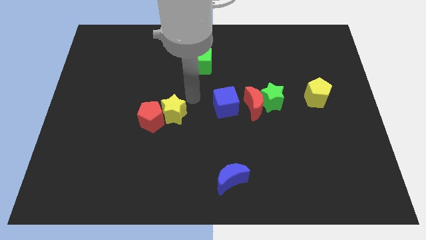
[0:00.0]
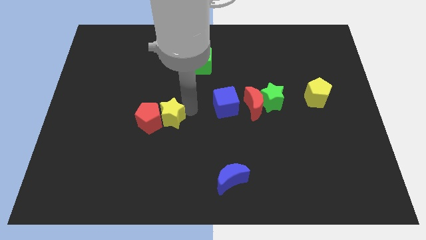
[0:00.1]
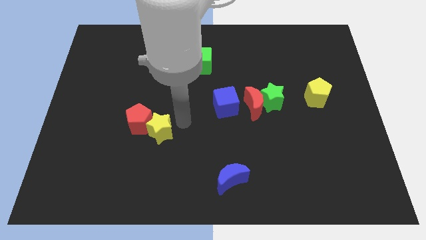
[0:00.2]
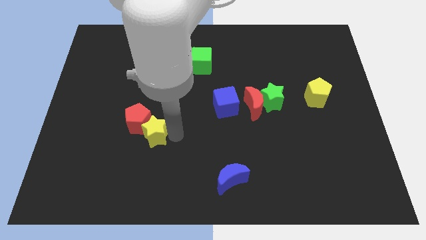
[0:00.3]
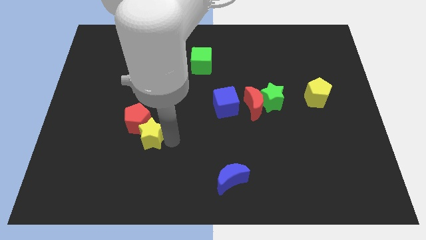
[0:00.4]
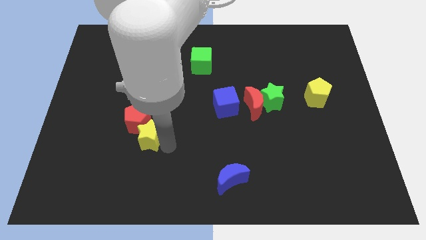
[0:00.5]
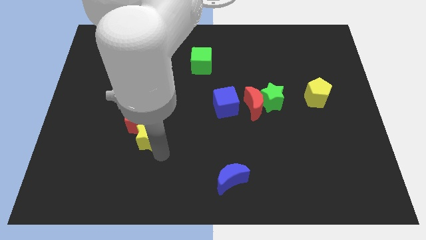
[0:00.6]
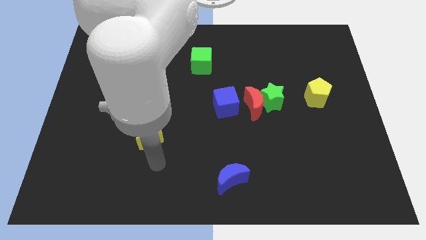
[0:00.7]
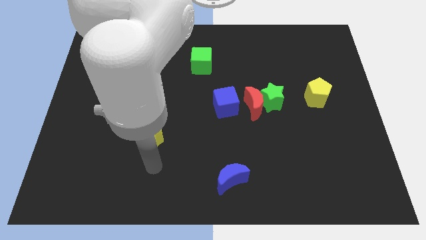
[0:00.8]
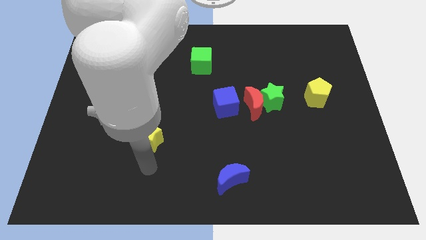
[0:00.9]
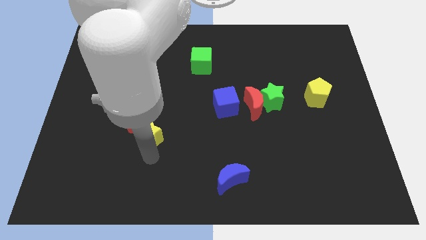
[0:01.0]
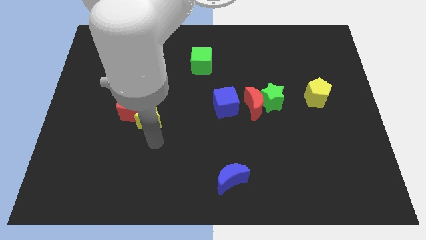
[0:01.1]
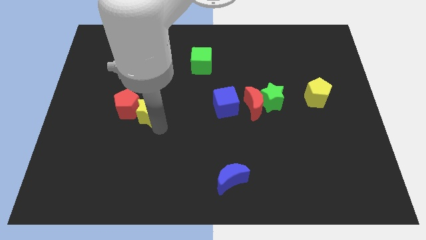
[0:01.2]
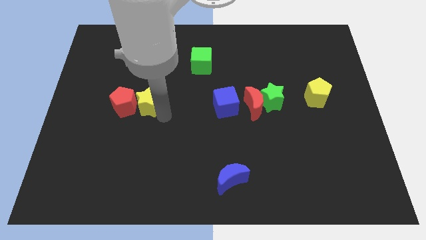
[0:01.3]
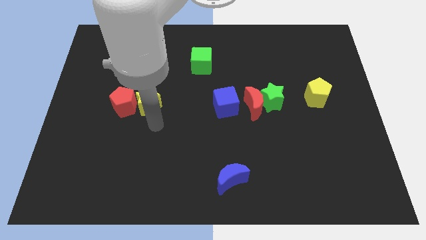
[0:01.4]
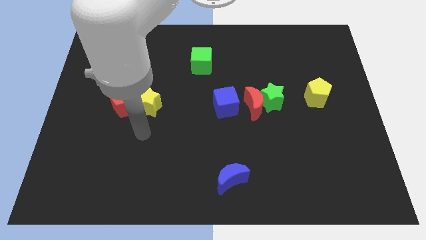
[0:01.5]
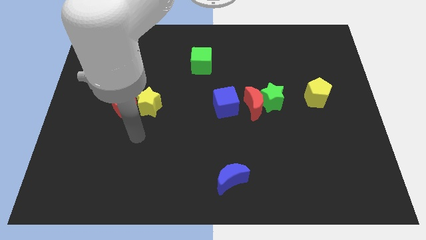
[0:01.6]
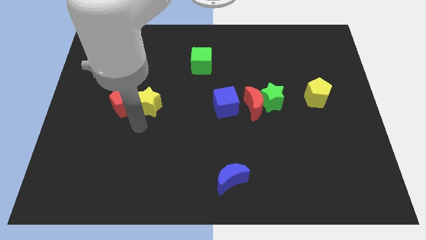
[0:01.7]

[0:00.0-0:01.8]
push the yellow star and red pentagon to the left side

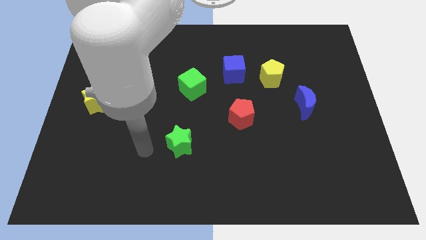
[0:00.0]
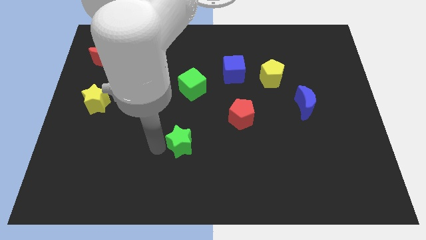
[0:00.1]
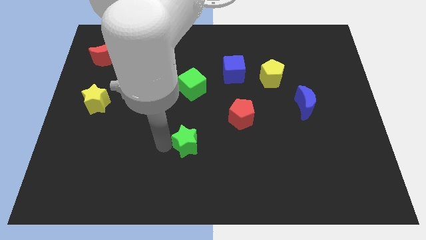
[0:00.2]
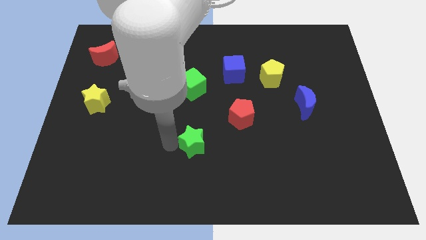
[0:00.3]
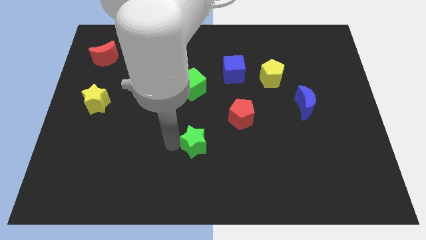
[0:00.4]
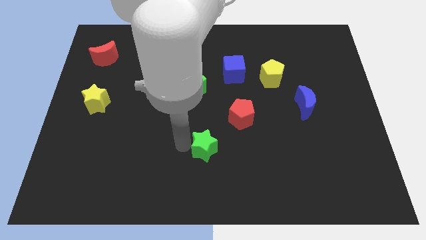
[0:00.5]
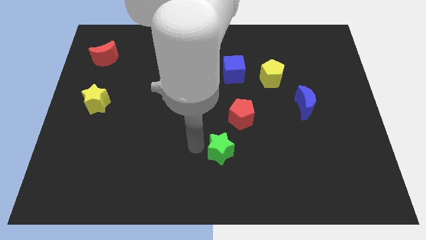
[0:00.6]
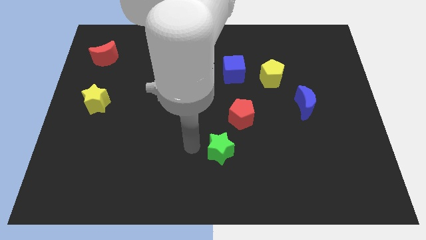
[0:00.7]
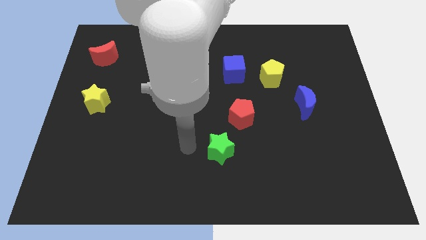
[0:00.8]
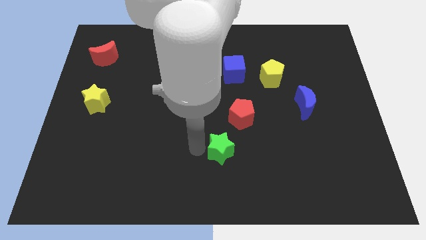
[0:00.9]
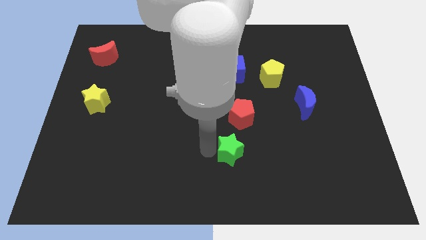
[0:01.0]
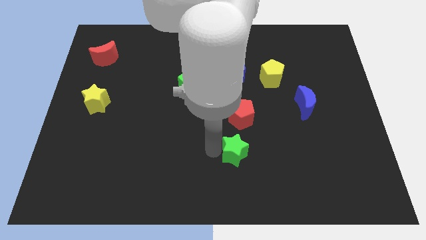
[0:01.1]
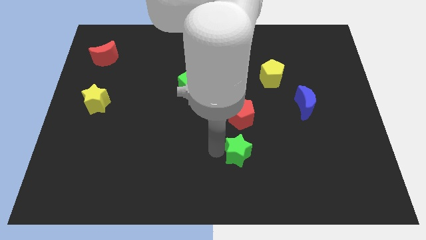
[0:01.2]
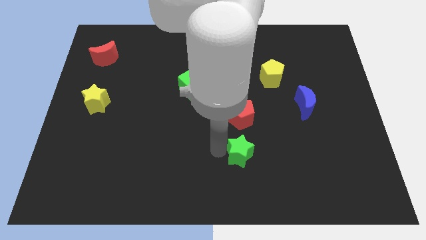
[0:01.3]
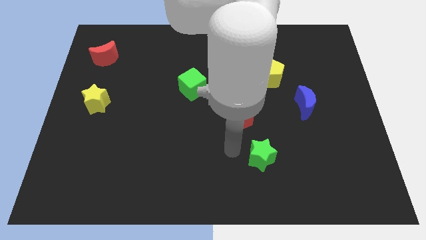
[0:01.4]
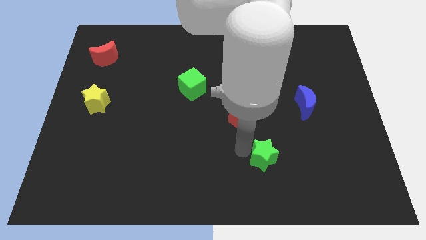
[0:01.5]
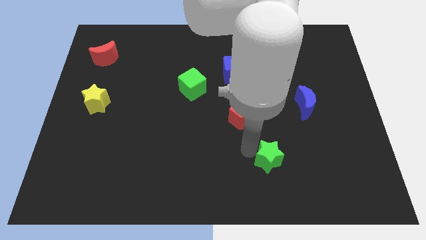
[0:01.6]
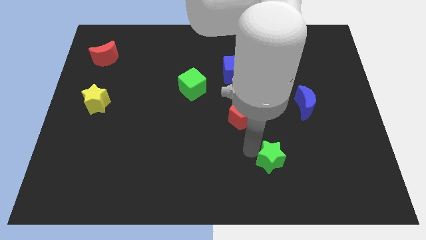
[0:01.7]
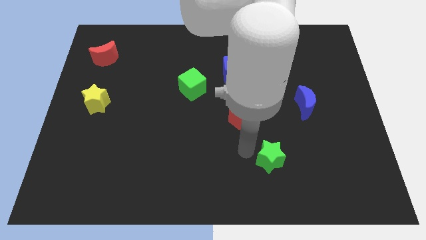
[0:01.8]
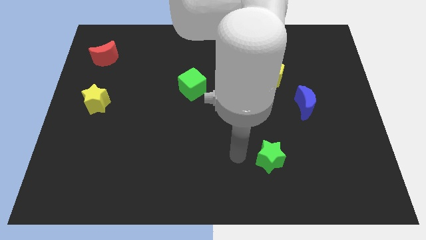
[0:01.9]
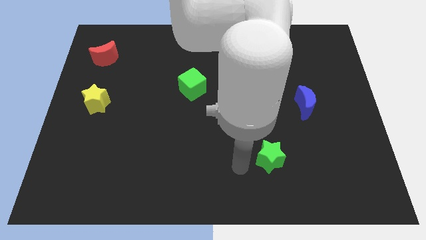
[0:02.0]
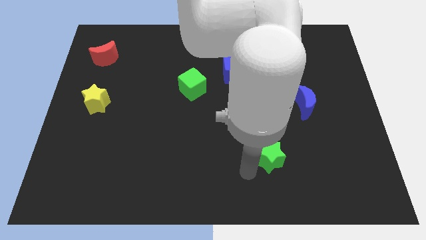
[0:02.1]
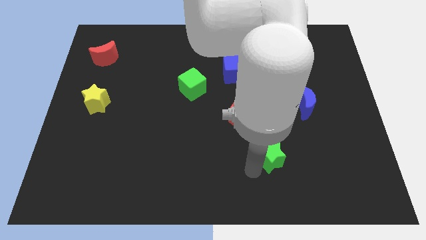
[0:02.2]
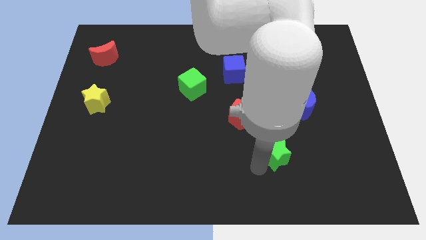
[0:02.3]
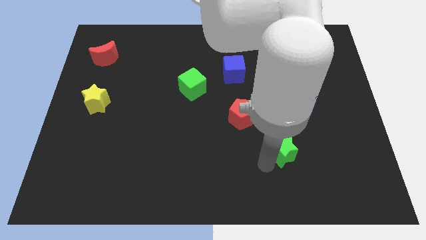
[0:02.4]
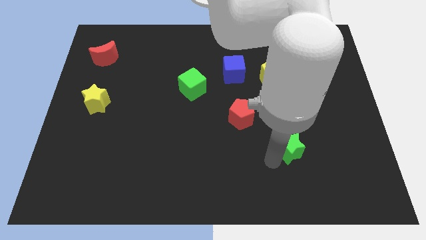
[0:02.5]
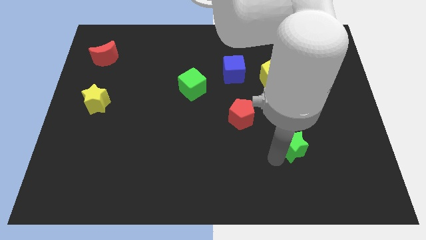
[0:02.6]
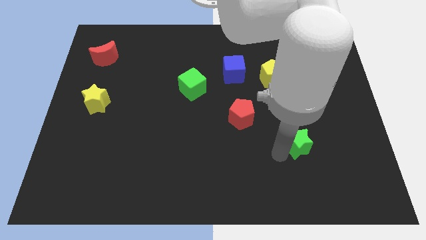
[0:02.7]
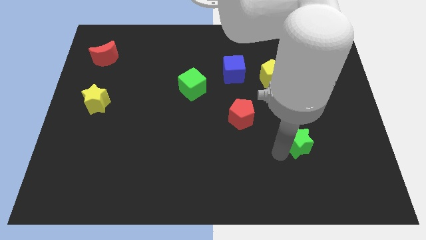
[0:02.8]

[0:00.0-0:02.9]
place the green star below the blue moon

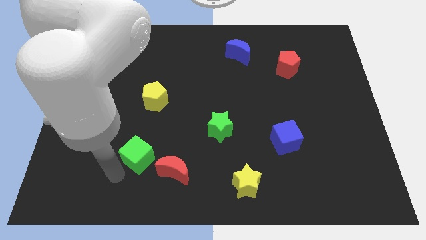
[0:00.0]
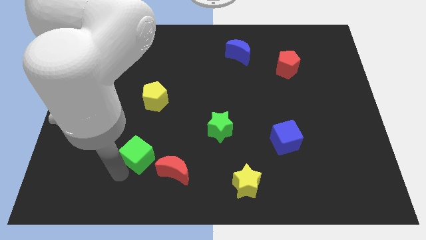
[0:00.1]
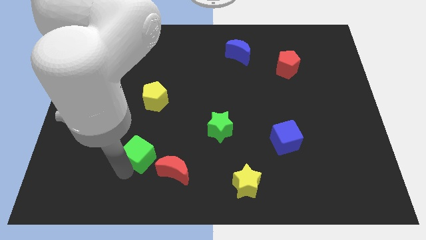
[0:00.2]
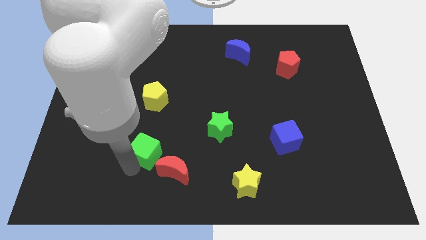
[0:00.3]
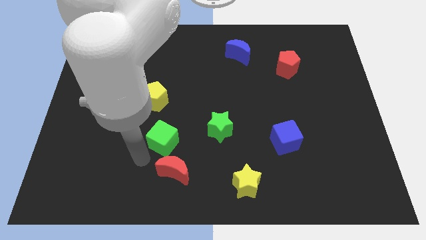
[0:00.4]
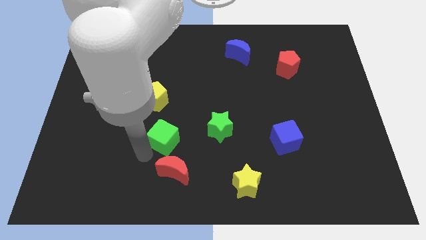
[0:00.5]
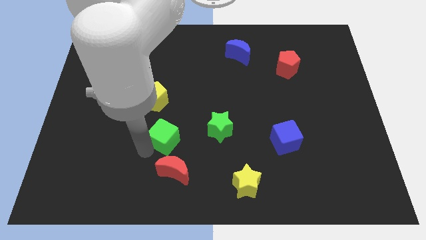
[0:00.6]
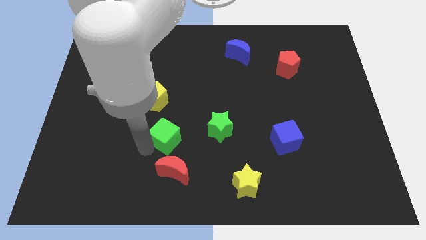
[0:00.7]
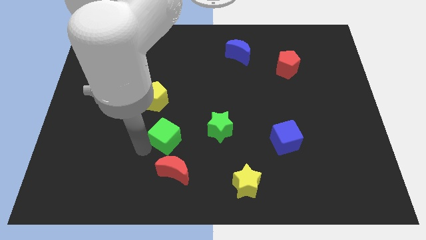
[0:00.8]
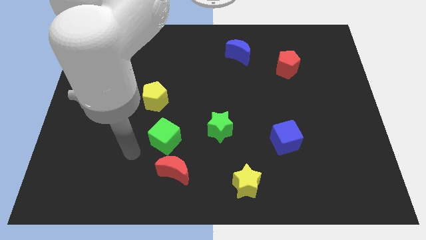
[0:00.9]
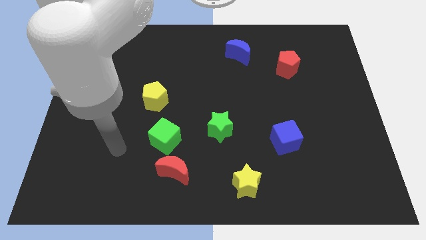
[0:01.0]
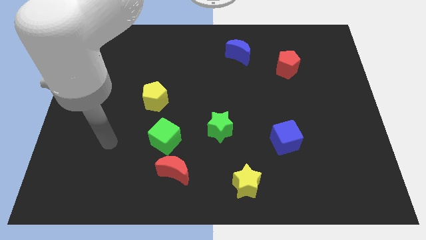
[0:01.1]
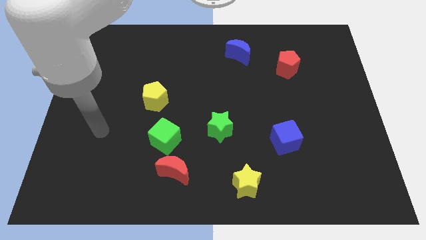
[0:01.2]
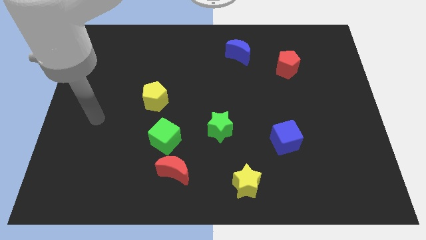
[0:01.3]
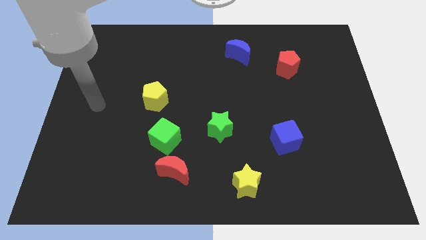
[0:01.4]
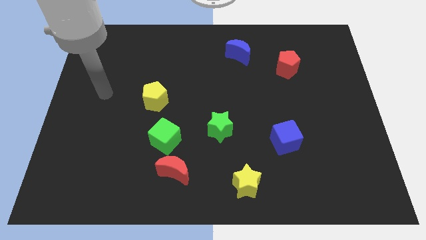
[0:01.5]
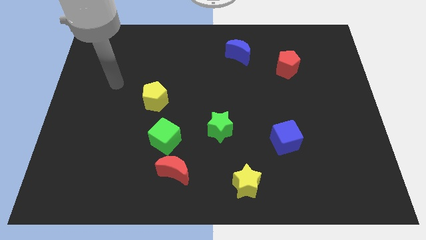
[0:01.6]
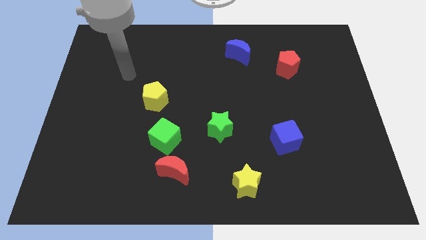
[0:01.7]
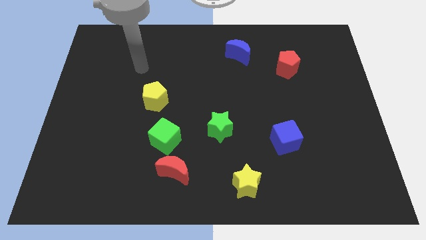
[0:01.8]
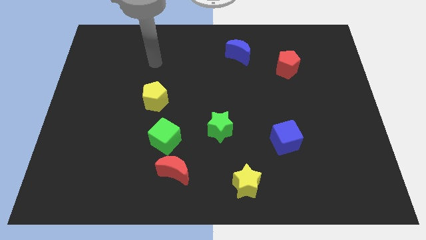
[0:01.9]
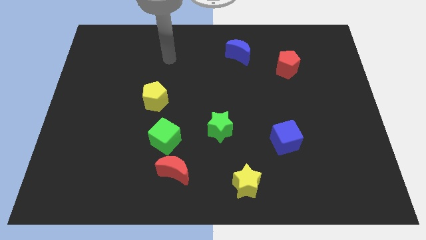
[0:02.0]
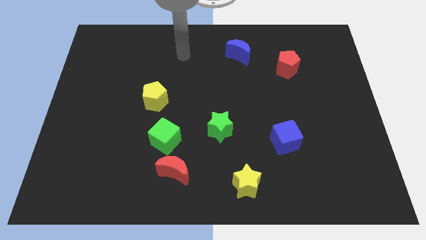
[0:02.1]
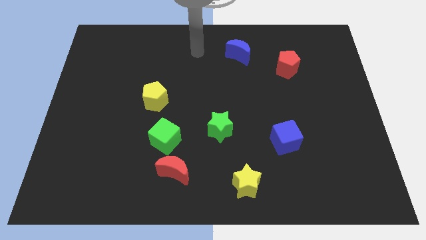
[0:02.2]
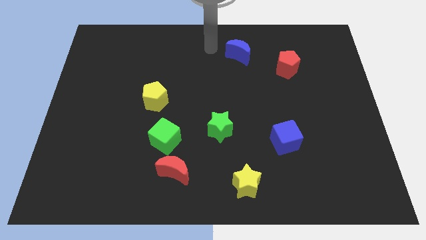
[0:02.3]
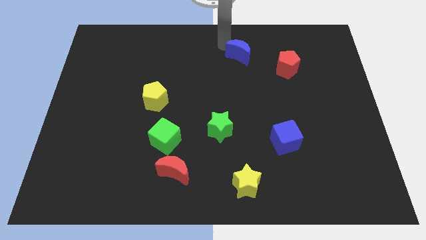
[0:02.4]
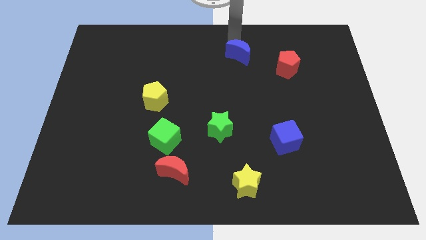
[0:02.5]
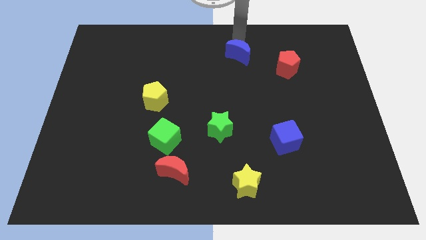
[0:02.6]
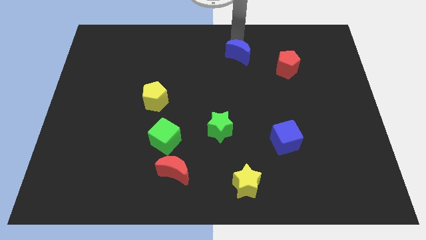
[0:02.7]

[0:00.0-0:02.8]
move the arm above the blue moon

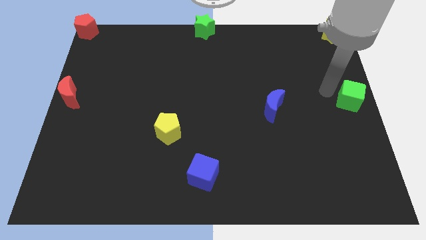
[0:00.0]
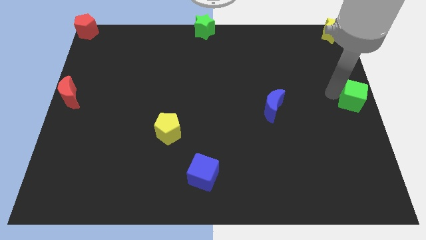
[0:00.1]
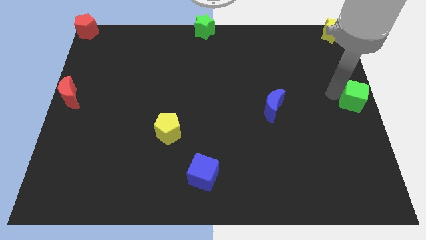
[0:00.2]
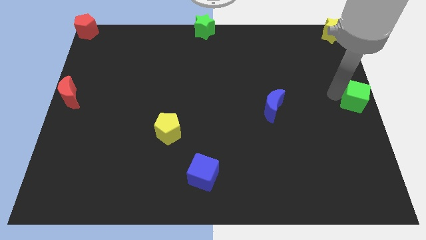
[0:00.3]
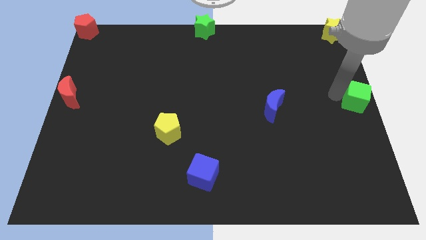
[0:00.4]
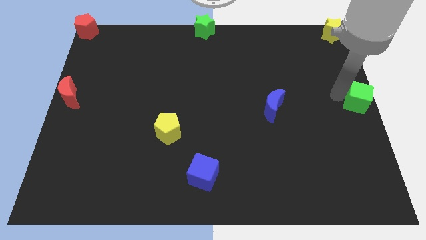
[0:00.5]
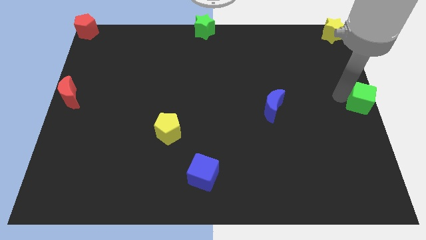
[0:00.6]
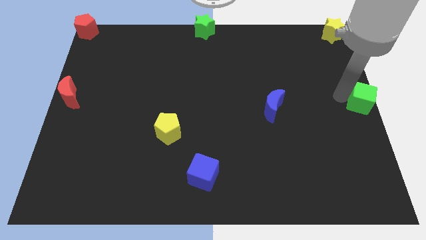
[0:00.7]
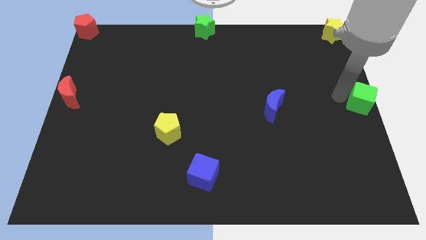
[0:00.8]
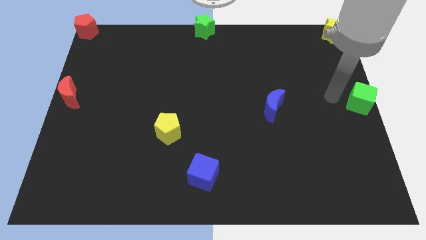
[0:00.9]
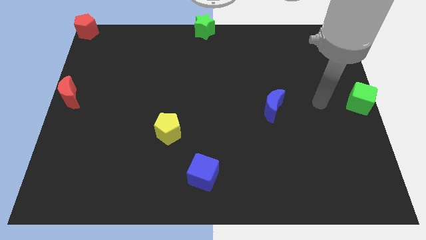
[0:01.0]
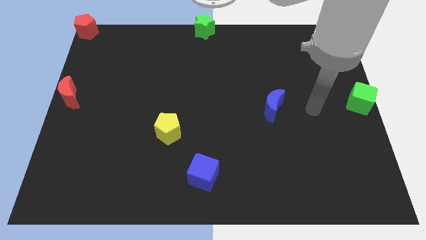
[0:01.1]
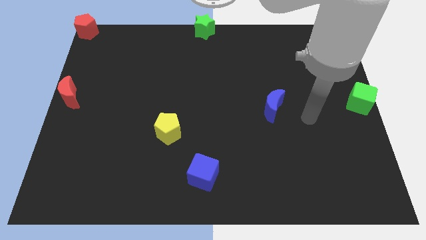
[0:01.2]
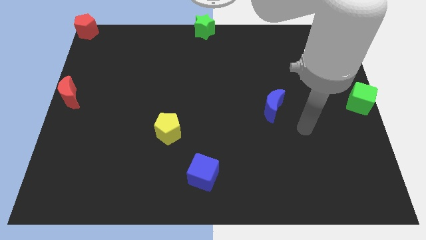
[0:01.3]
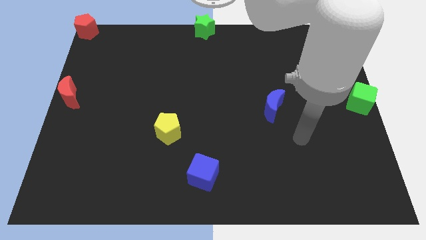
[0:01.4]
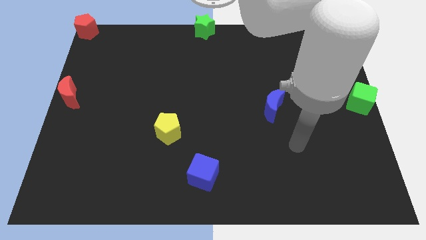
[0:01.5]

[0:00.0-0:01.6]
put the green cube at the left center of the board
